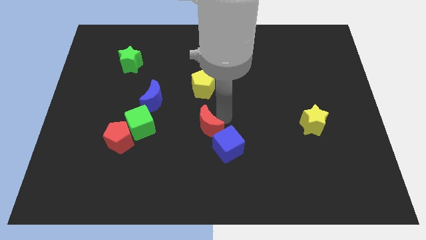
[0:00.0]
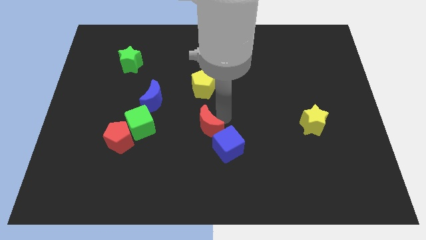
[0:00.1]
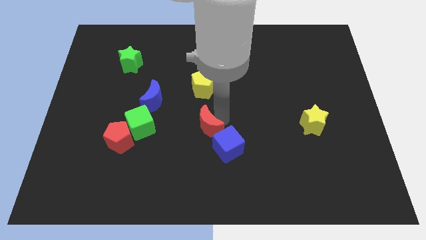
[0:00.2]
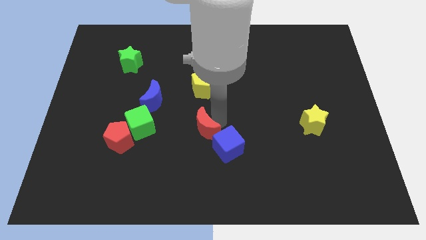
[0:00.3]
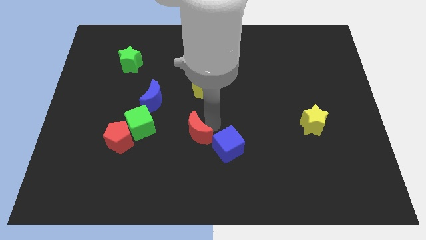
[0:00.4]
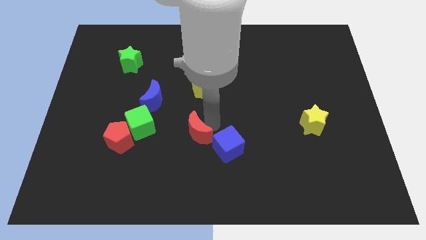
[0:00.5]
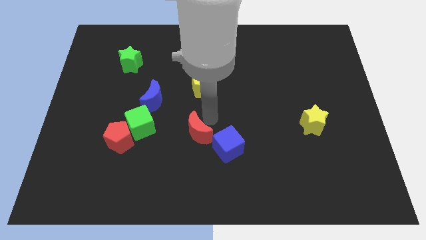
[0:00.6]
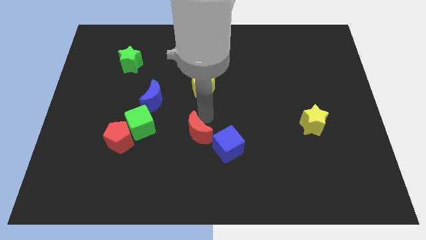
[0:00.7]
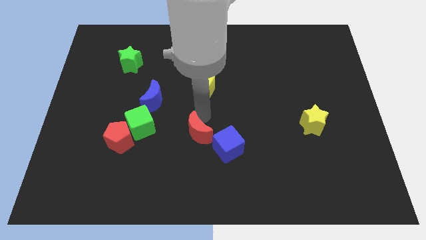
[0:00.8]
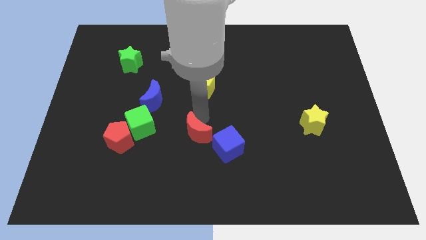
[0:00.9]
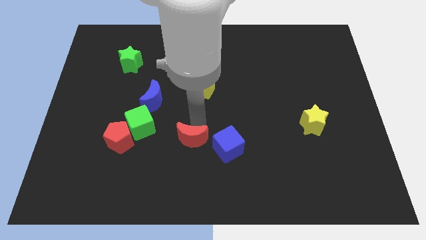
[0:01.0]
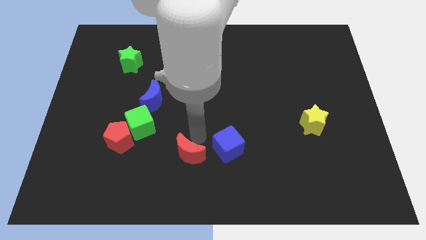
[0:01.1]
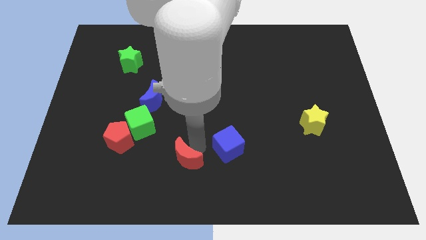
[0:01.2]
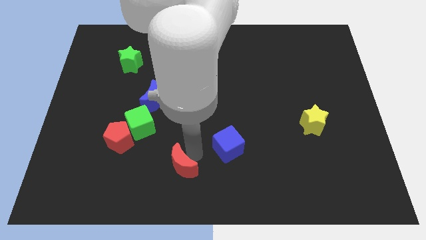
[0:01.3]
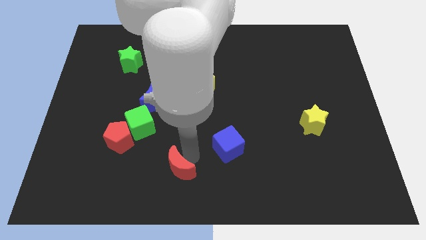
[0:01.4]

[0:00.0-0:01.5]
move the red crescent towards the down of the board

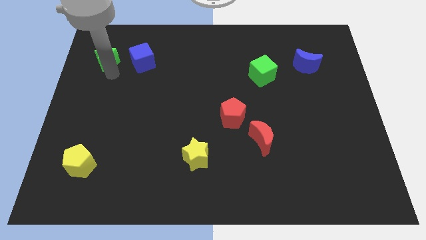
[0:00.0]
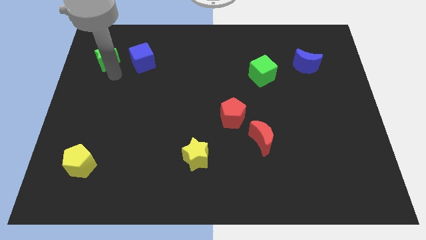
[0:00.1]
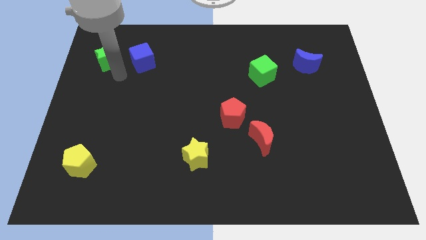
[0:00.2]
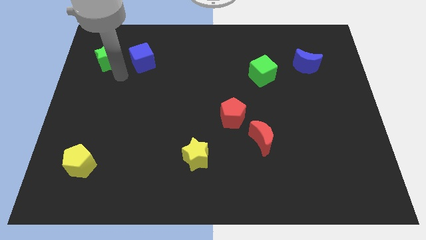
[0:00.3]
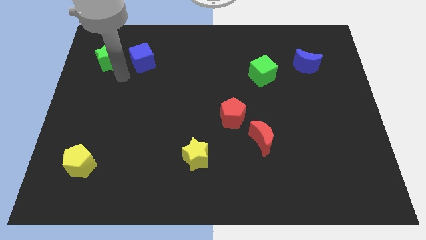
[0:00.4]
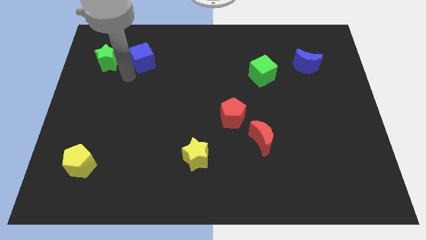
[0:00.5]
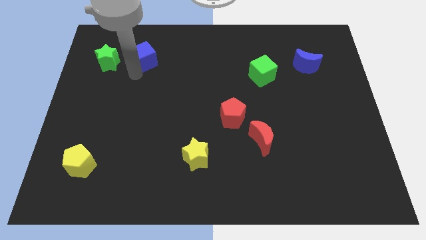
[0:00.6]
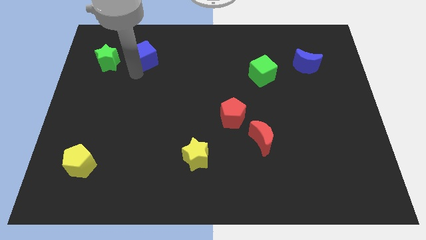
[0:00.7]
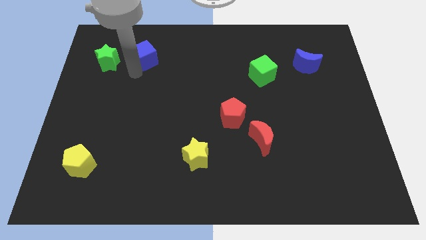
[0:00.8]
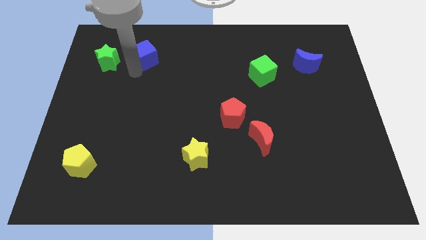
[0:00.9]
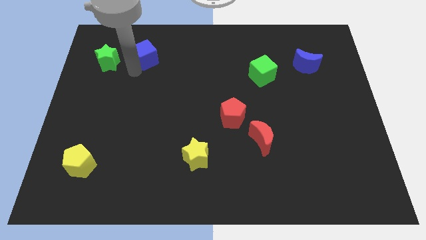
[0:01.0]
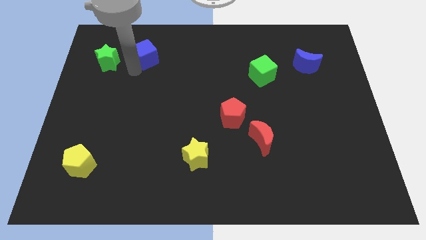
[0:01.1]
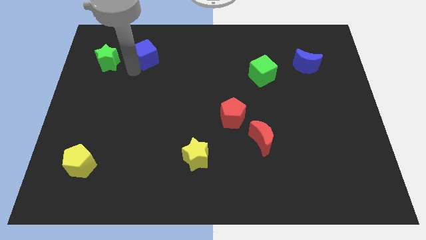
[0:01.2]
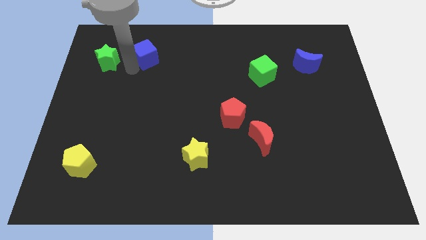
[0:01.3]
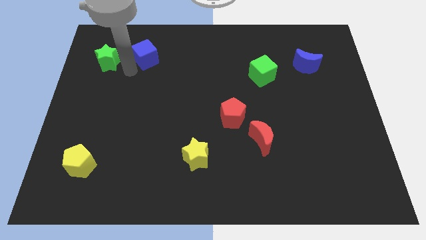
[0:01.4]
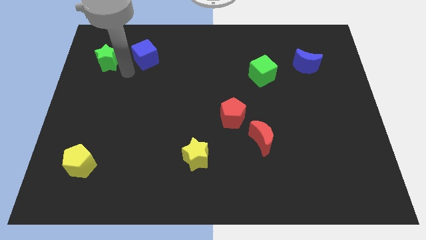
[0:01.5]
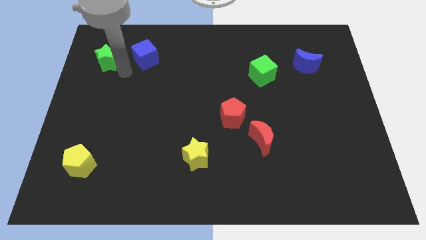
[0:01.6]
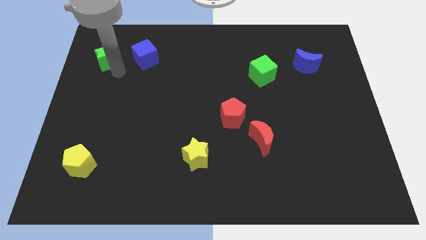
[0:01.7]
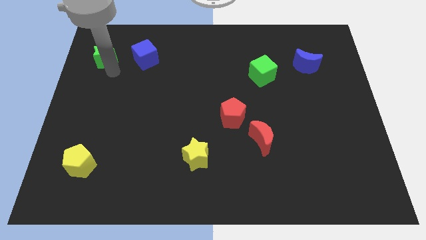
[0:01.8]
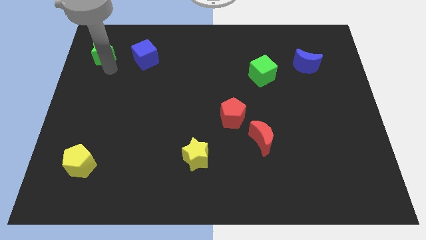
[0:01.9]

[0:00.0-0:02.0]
place green star and blue cube adjacent to each other

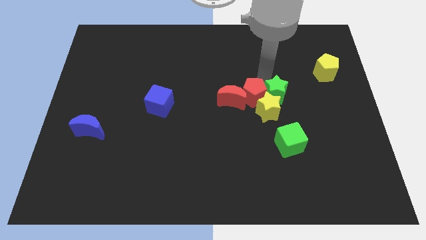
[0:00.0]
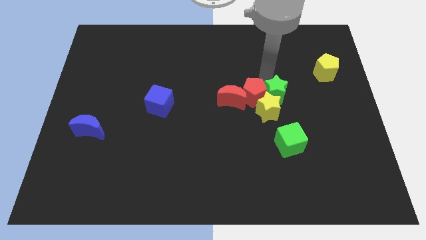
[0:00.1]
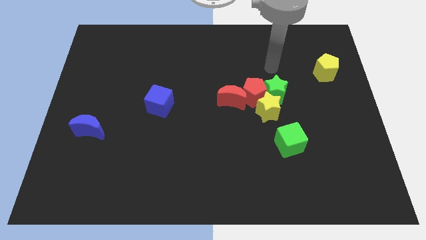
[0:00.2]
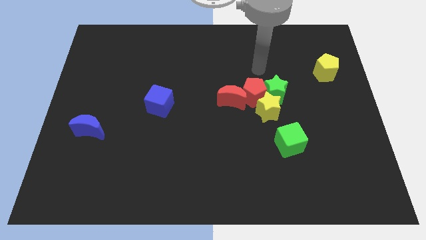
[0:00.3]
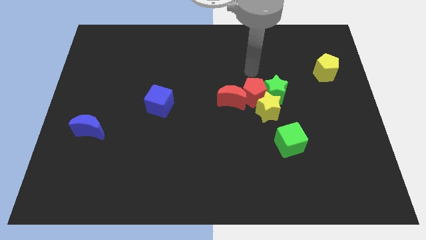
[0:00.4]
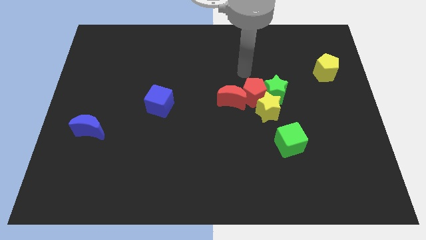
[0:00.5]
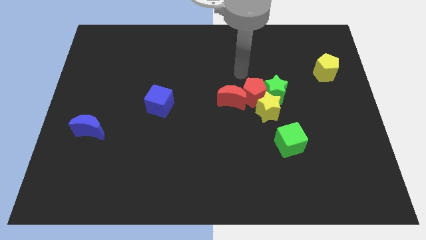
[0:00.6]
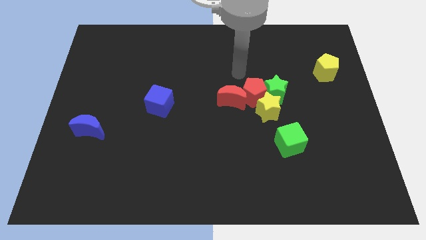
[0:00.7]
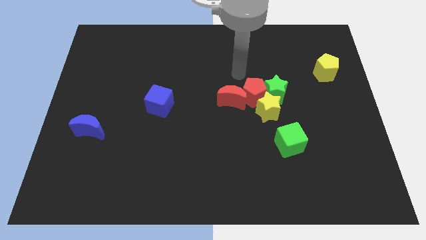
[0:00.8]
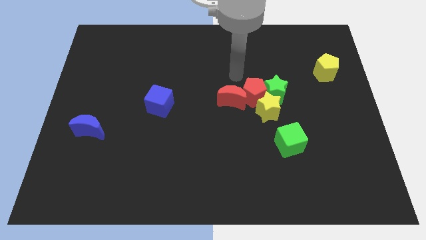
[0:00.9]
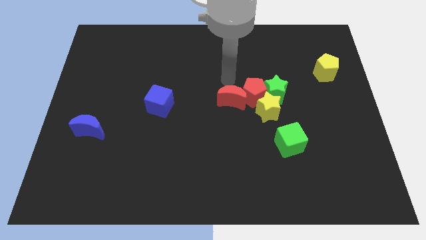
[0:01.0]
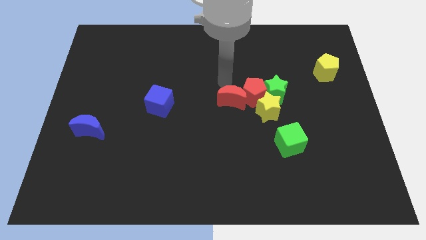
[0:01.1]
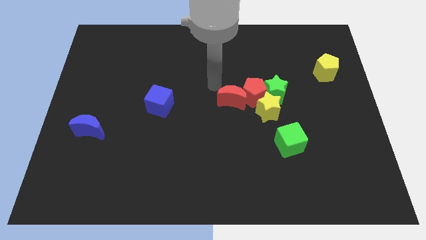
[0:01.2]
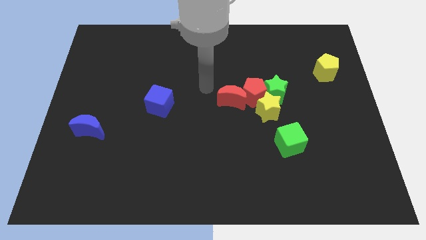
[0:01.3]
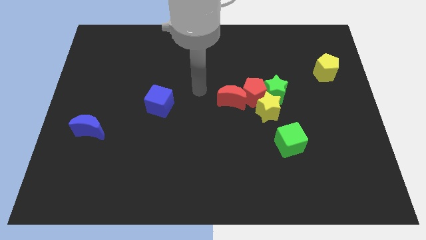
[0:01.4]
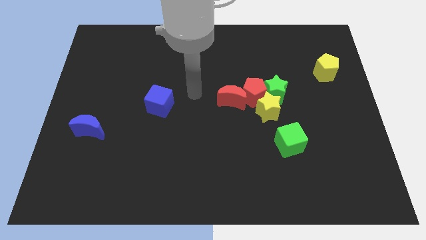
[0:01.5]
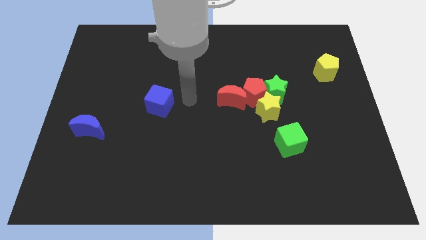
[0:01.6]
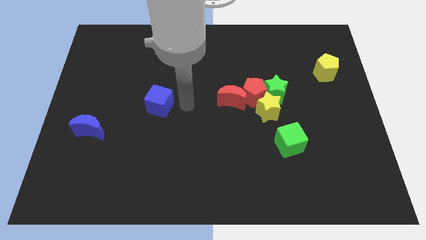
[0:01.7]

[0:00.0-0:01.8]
place your hand in between the blue cube and red moon

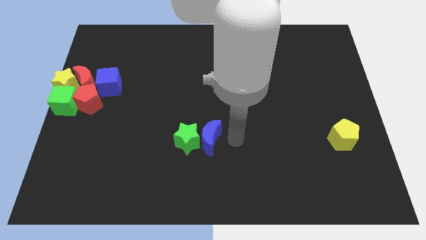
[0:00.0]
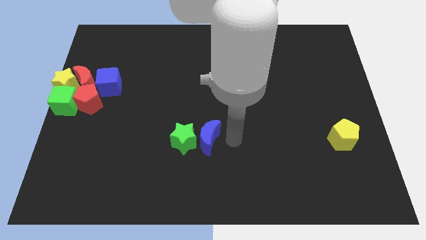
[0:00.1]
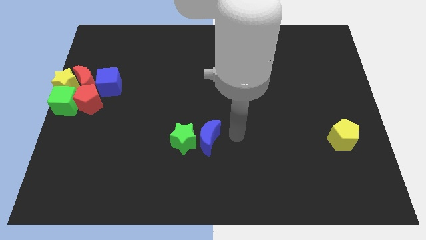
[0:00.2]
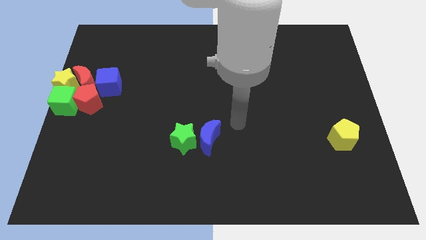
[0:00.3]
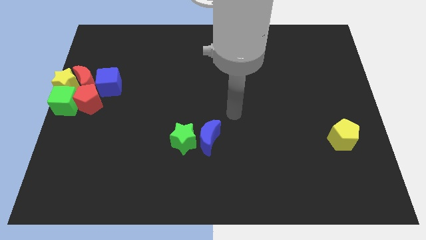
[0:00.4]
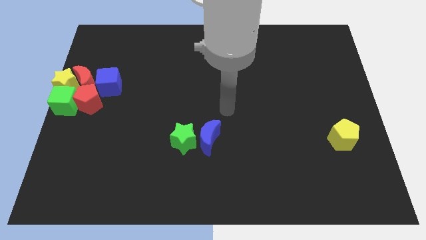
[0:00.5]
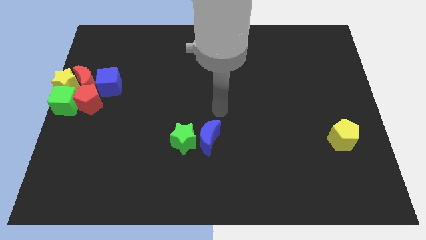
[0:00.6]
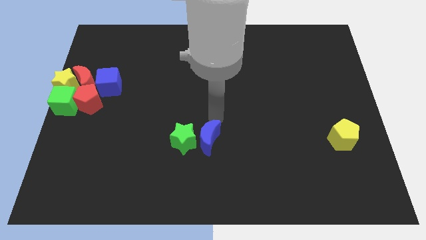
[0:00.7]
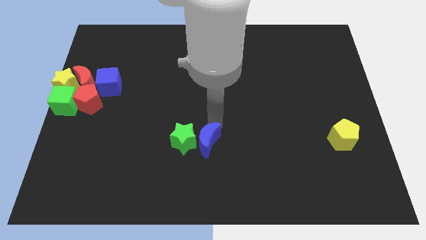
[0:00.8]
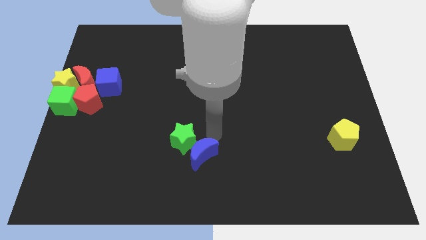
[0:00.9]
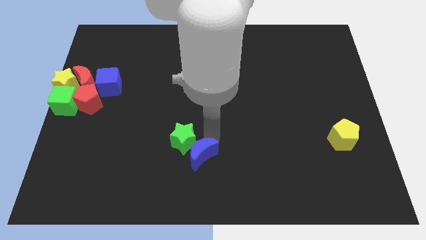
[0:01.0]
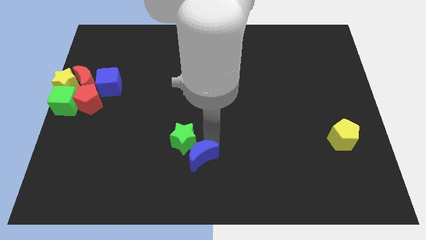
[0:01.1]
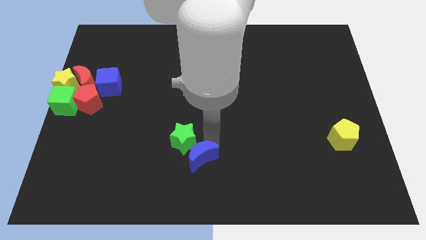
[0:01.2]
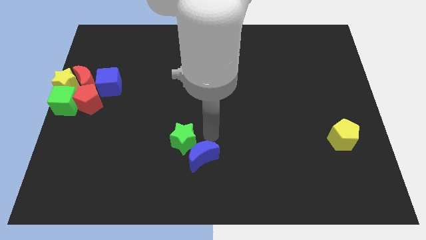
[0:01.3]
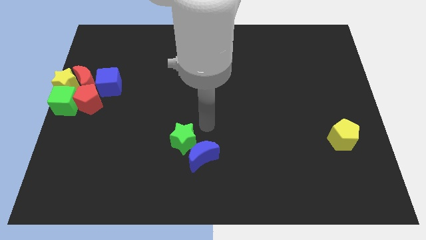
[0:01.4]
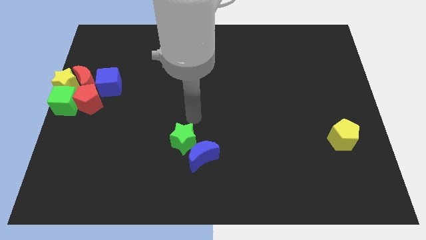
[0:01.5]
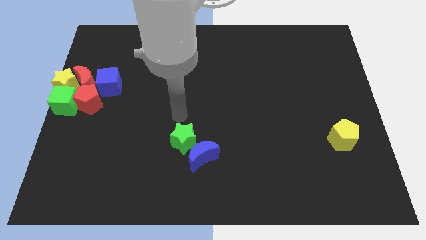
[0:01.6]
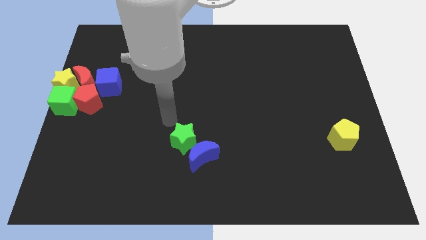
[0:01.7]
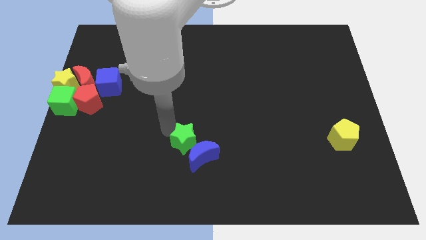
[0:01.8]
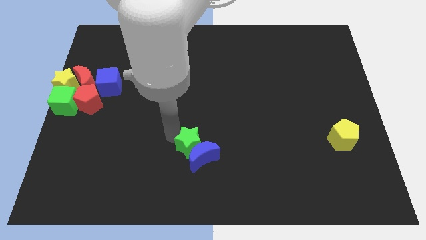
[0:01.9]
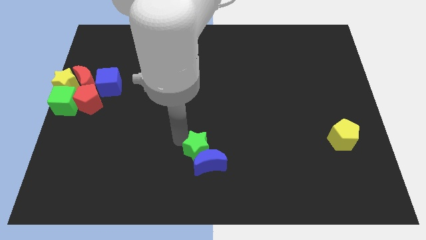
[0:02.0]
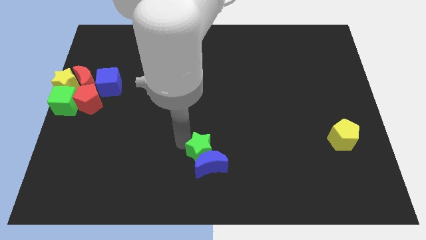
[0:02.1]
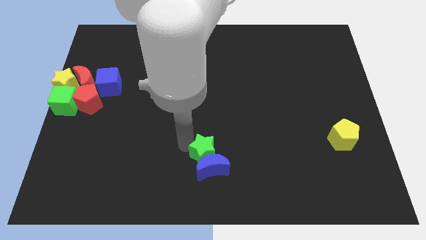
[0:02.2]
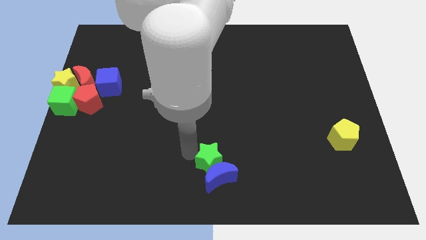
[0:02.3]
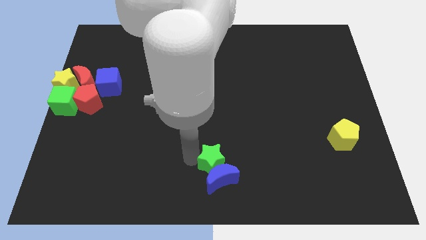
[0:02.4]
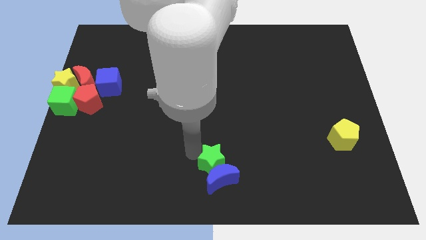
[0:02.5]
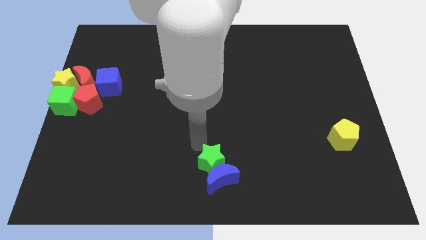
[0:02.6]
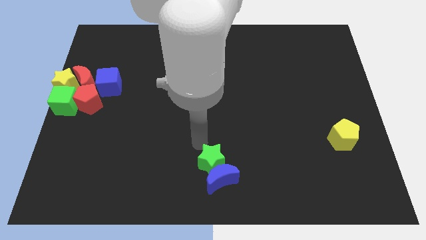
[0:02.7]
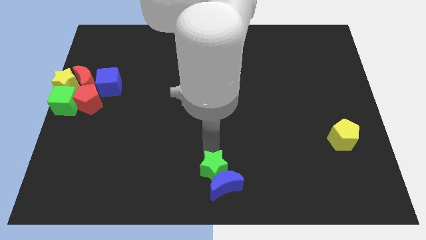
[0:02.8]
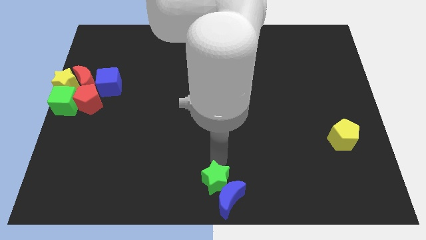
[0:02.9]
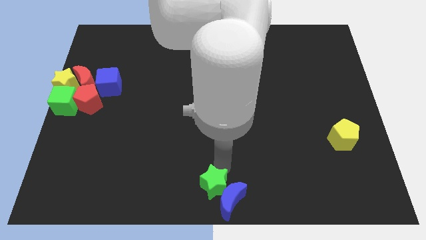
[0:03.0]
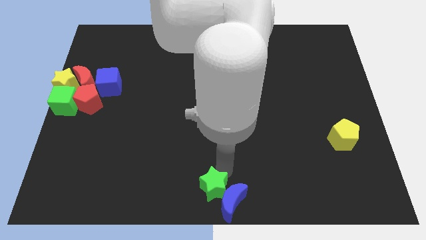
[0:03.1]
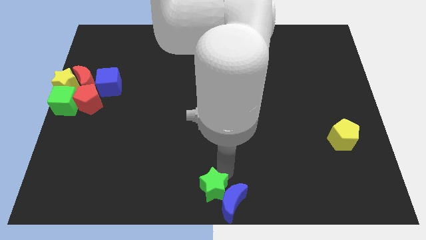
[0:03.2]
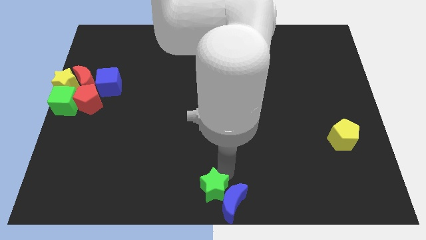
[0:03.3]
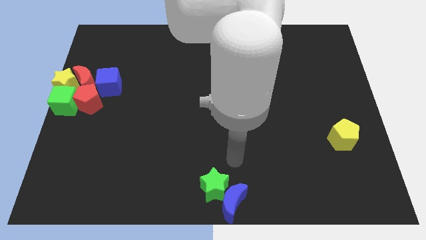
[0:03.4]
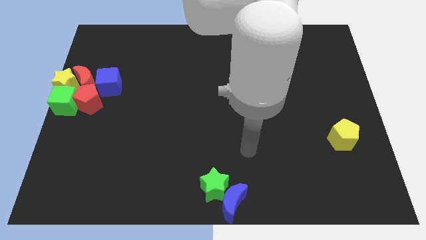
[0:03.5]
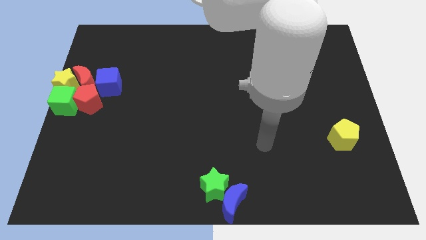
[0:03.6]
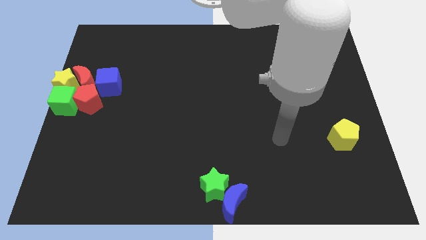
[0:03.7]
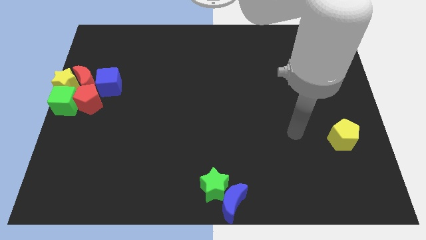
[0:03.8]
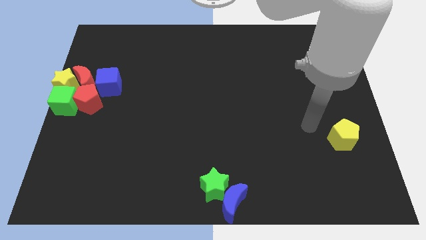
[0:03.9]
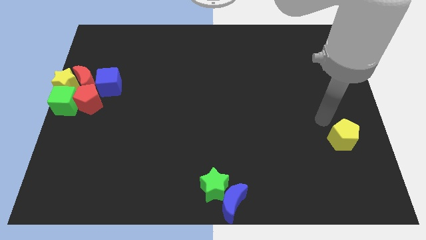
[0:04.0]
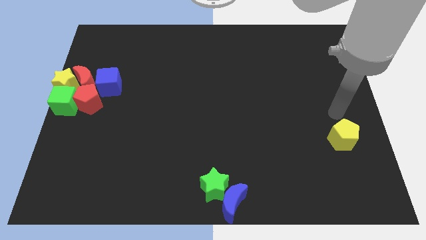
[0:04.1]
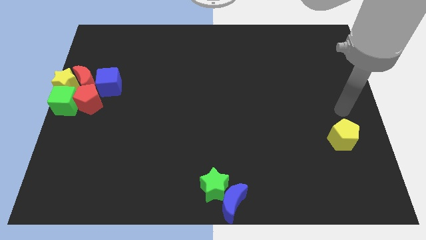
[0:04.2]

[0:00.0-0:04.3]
place both blue crescent and green star to bottom center of the board
